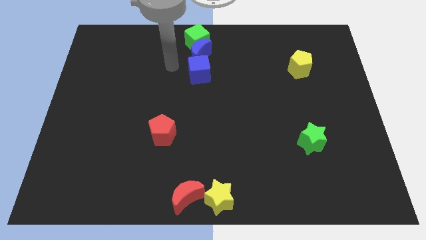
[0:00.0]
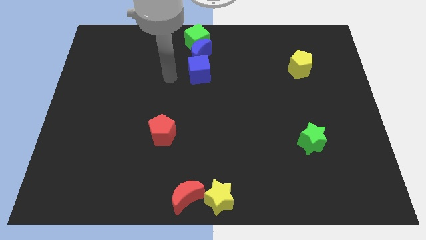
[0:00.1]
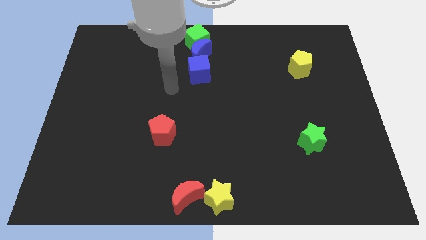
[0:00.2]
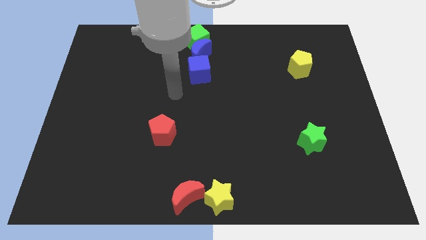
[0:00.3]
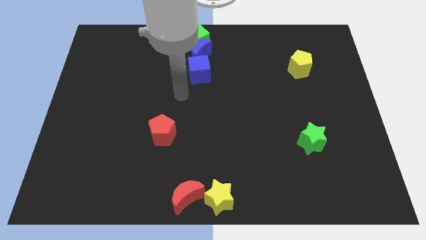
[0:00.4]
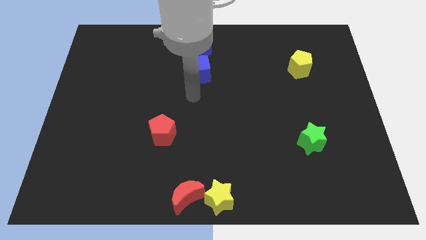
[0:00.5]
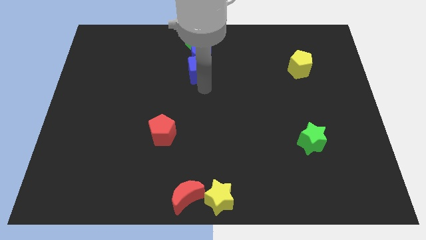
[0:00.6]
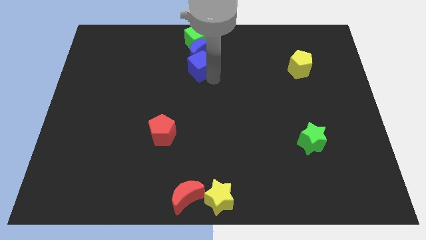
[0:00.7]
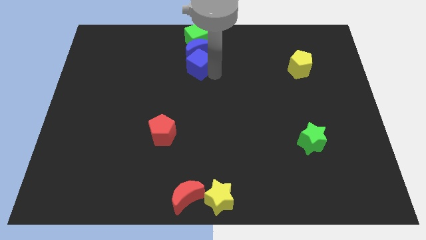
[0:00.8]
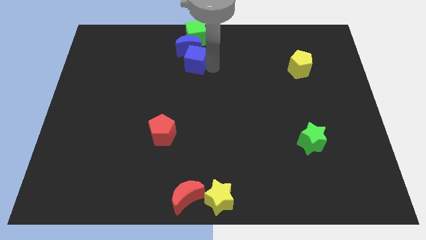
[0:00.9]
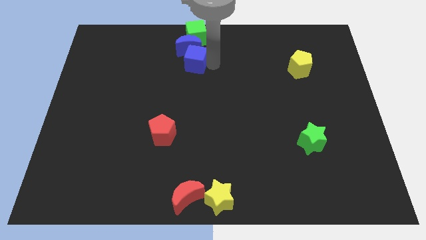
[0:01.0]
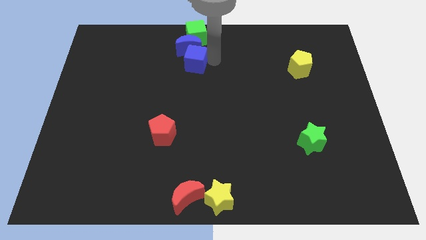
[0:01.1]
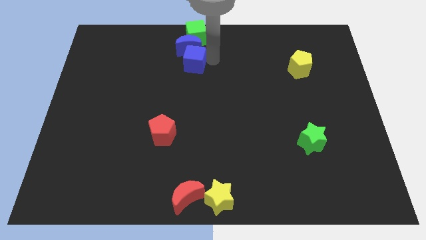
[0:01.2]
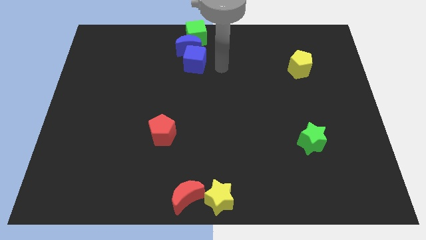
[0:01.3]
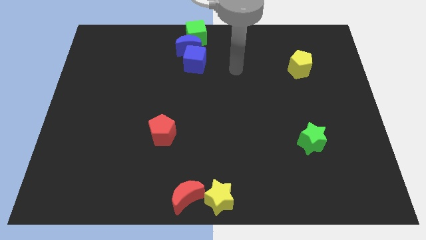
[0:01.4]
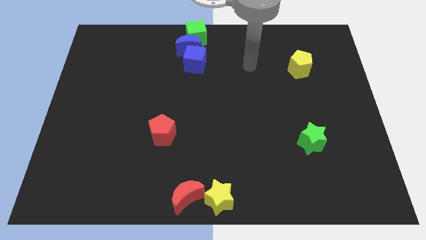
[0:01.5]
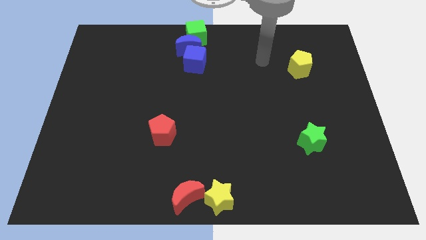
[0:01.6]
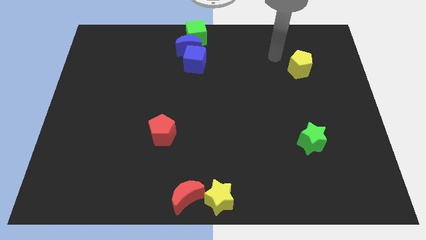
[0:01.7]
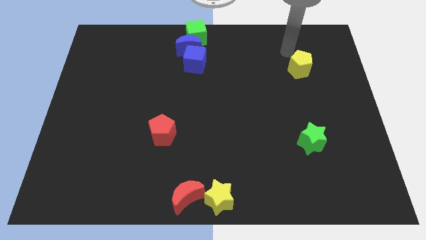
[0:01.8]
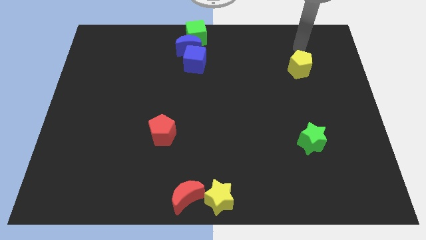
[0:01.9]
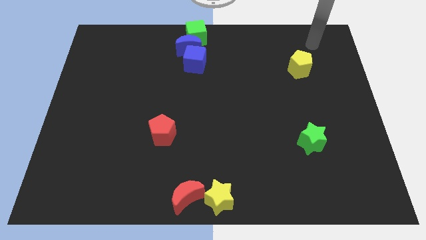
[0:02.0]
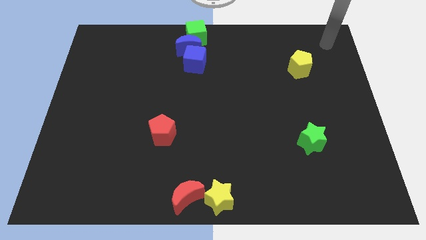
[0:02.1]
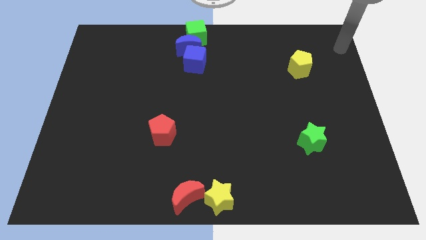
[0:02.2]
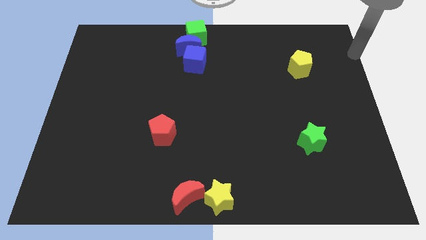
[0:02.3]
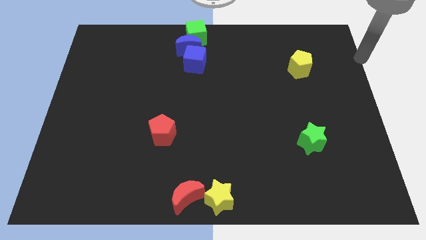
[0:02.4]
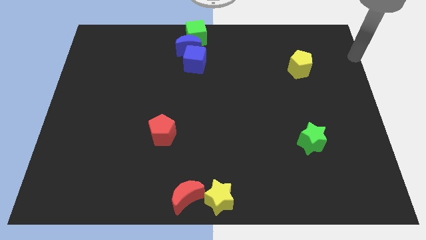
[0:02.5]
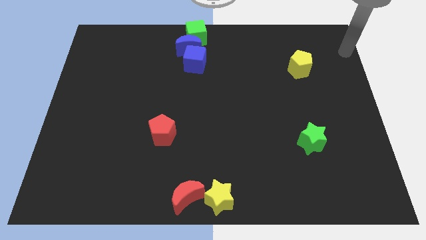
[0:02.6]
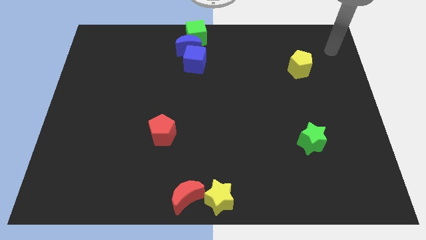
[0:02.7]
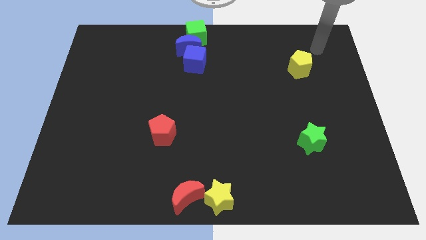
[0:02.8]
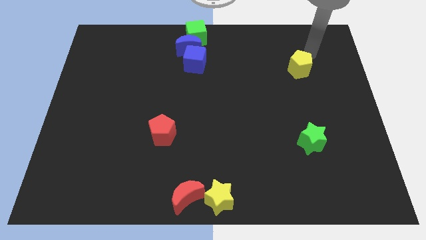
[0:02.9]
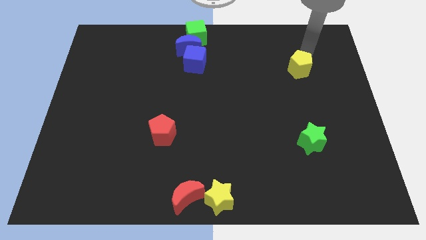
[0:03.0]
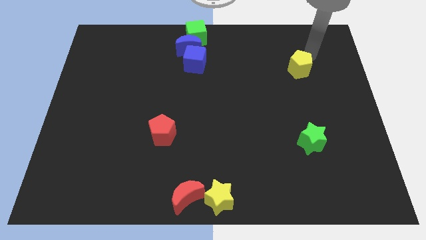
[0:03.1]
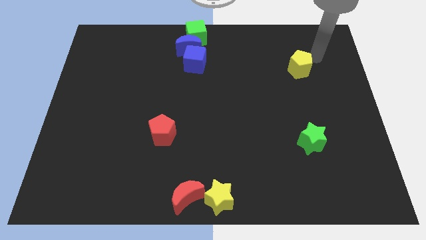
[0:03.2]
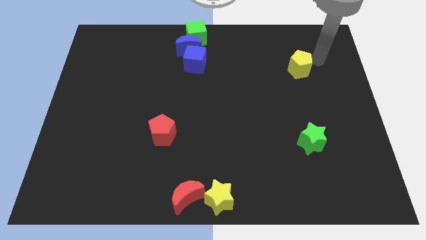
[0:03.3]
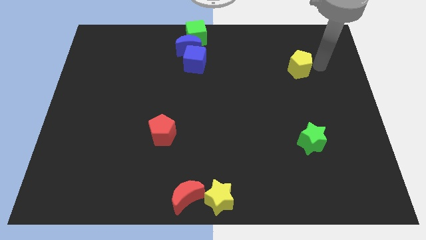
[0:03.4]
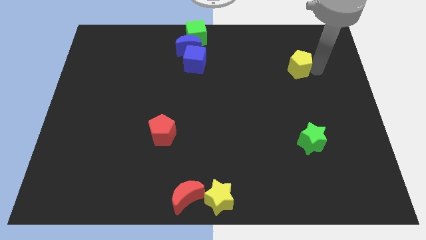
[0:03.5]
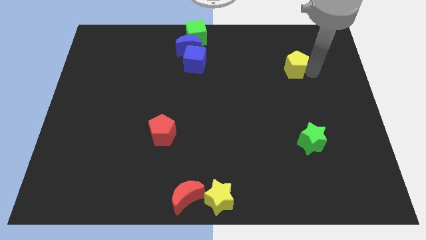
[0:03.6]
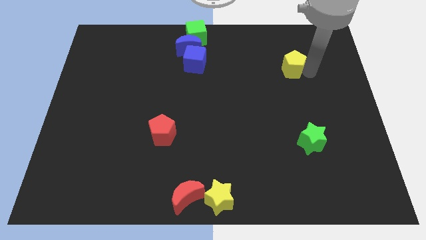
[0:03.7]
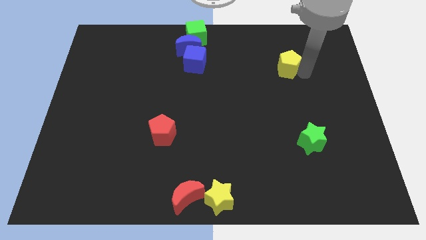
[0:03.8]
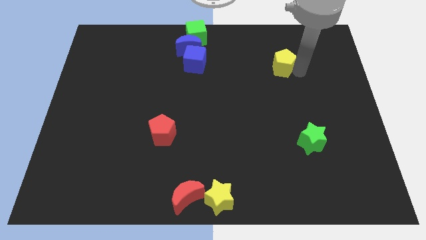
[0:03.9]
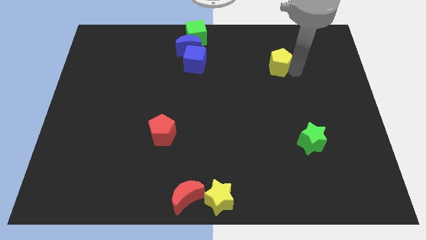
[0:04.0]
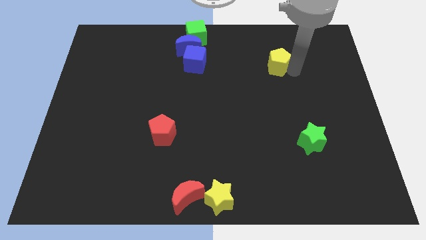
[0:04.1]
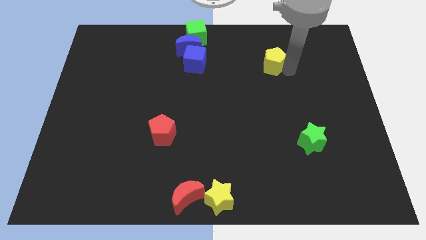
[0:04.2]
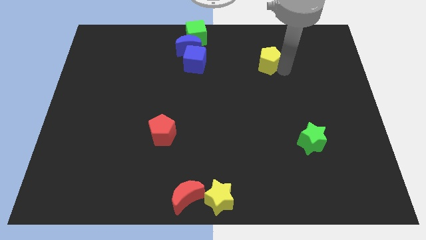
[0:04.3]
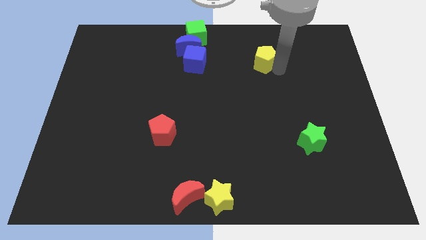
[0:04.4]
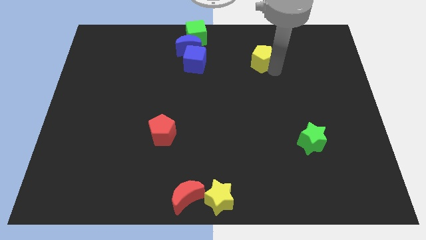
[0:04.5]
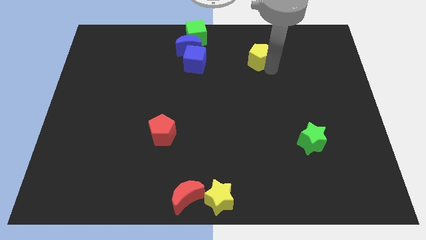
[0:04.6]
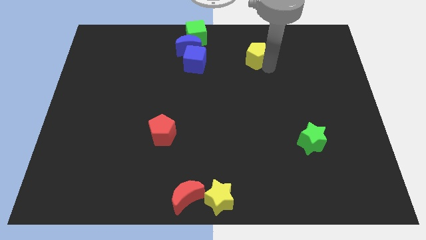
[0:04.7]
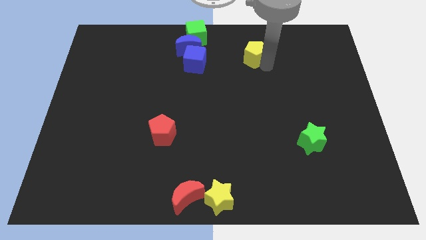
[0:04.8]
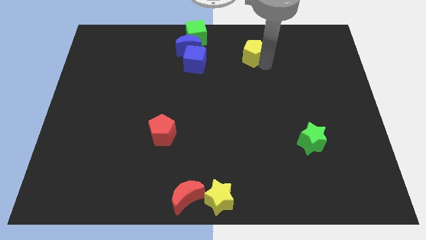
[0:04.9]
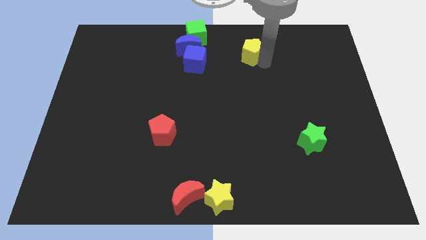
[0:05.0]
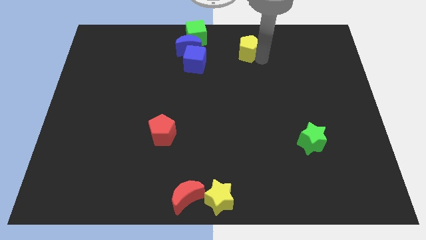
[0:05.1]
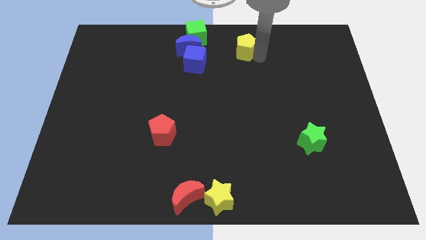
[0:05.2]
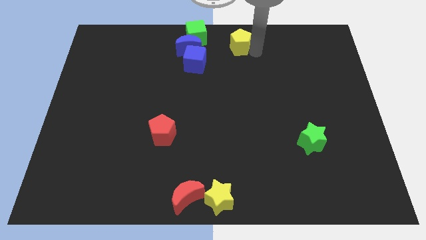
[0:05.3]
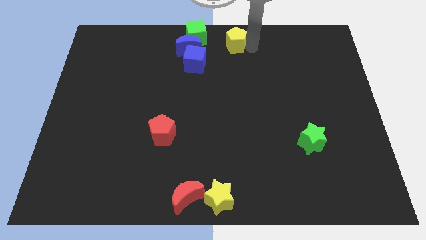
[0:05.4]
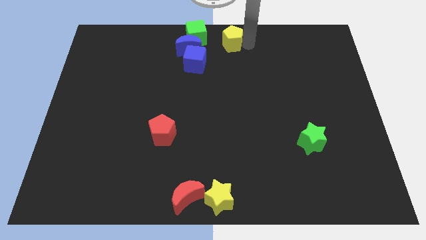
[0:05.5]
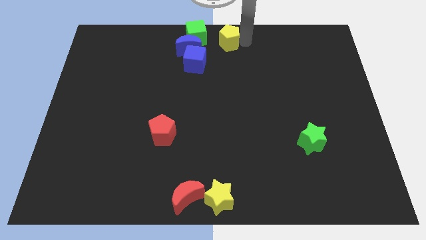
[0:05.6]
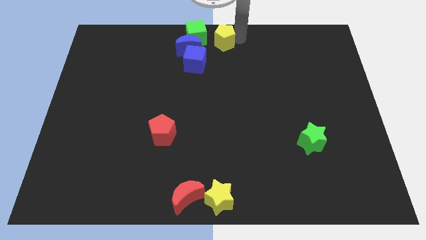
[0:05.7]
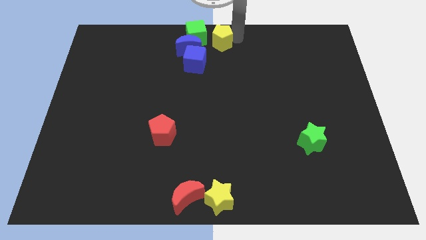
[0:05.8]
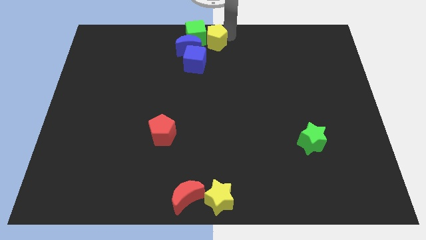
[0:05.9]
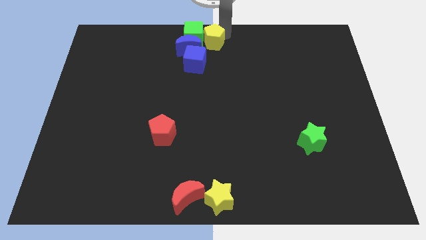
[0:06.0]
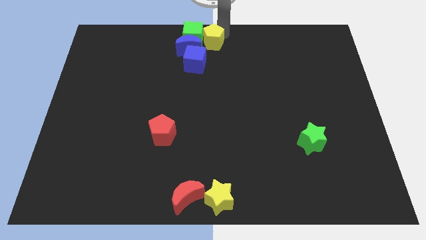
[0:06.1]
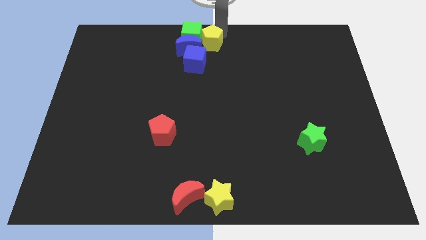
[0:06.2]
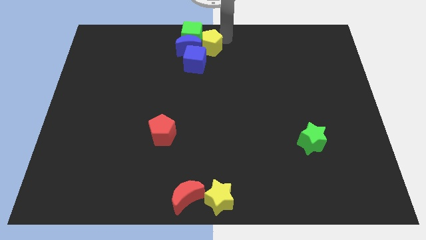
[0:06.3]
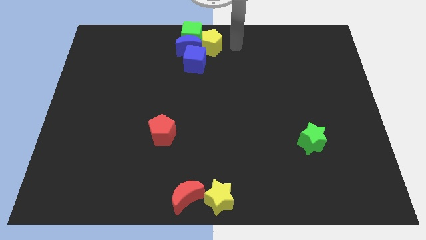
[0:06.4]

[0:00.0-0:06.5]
group up the yellow pentagon green cube and other two blue blocks at the top side of the table

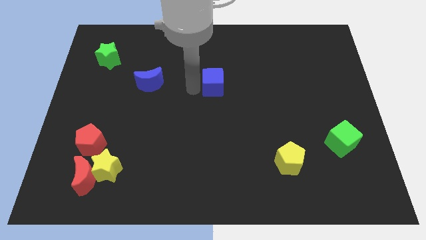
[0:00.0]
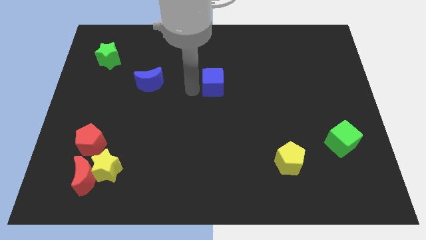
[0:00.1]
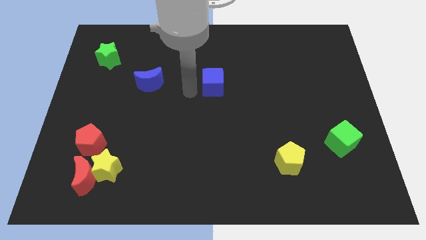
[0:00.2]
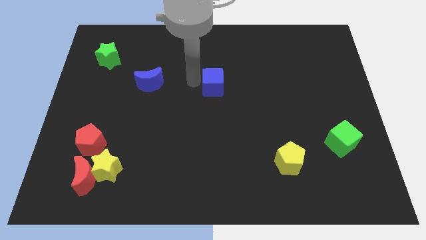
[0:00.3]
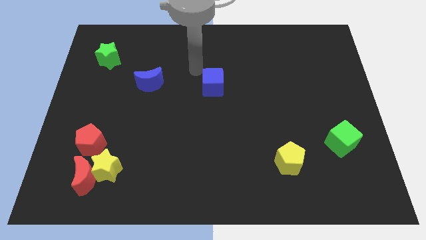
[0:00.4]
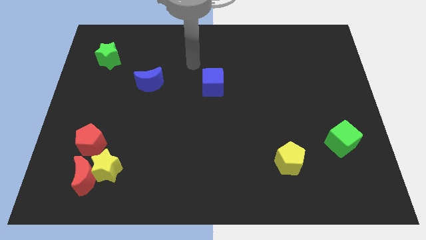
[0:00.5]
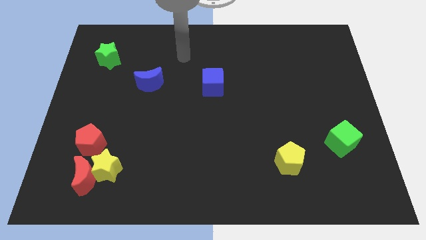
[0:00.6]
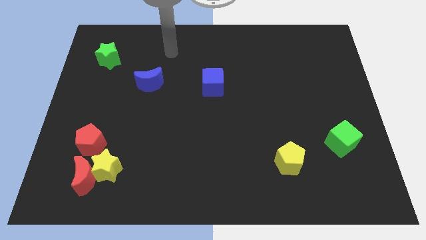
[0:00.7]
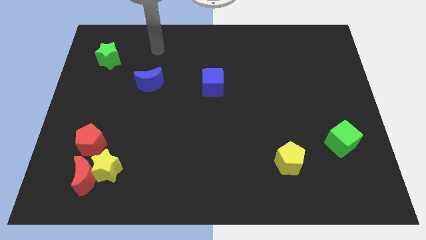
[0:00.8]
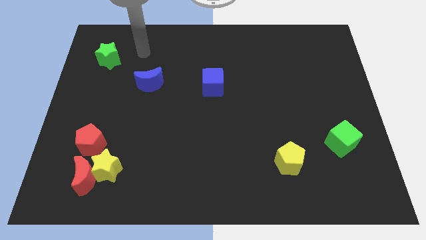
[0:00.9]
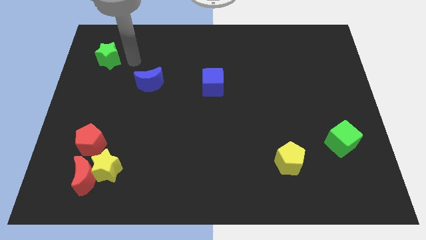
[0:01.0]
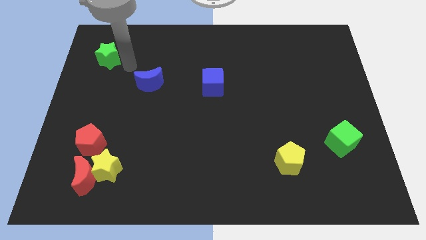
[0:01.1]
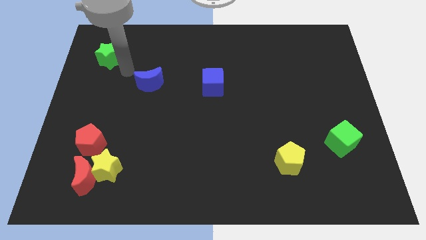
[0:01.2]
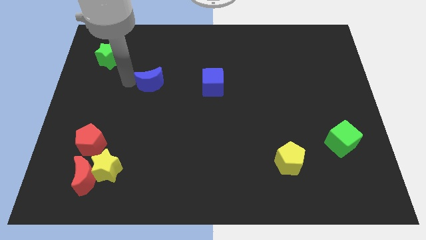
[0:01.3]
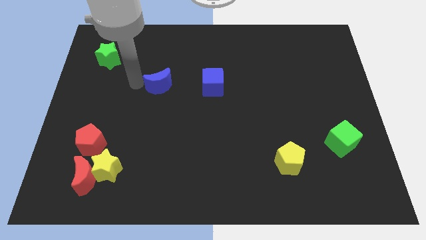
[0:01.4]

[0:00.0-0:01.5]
touch the left of the blue moon

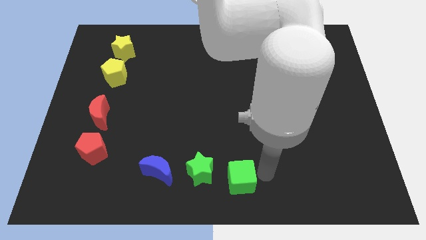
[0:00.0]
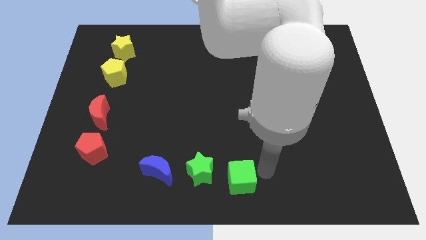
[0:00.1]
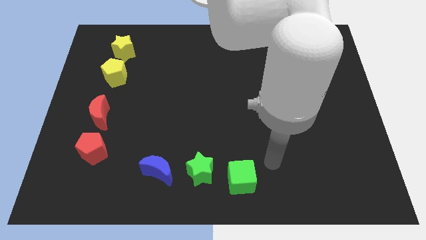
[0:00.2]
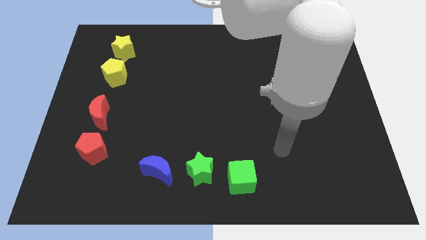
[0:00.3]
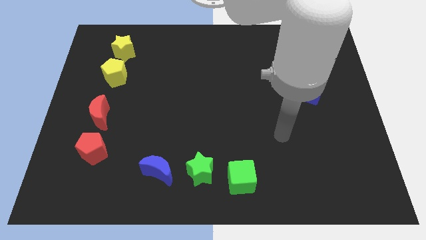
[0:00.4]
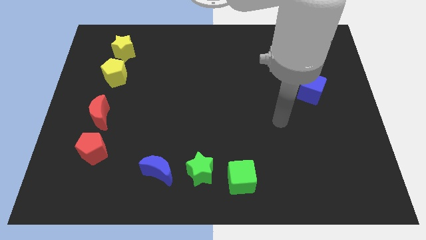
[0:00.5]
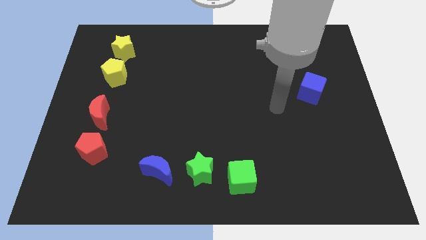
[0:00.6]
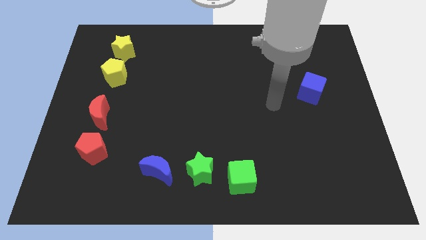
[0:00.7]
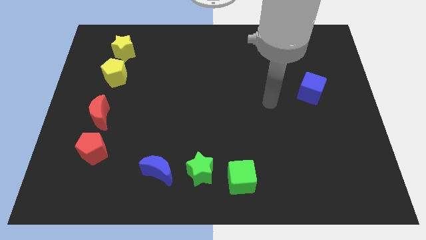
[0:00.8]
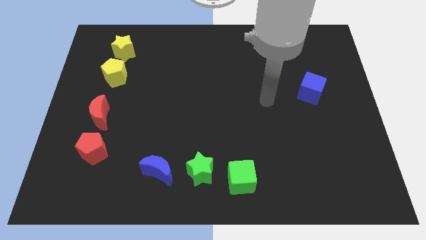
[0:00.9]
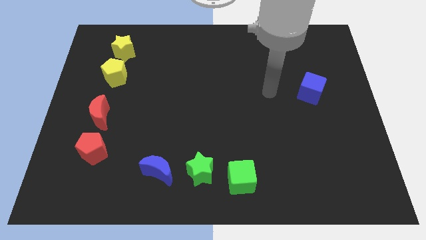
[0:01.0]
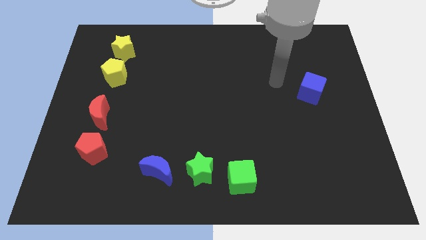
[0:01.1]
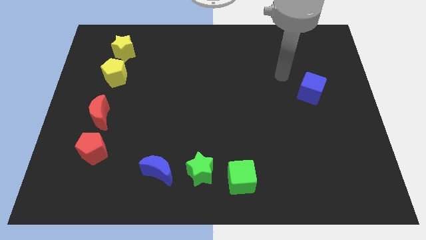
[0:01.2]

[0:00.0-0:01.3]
move your arm away from the green cube
